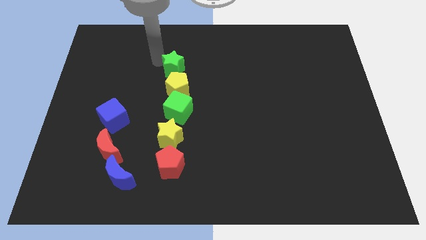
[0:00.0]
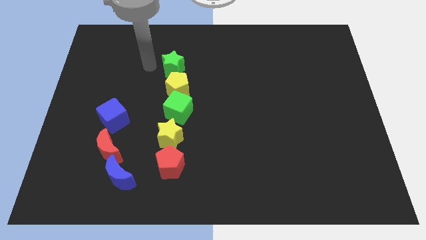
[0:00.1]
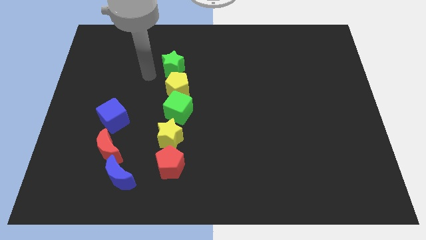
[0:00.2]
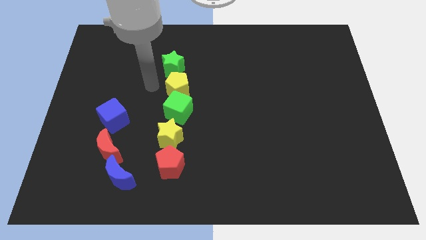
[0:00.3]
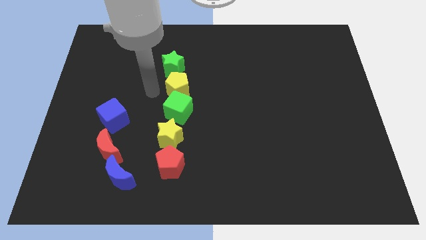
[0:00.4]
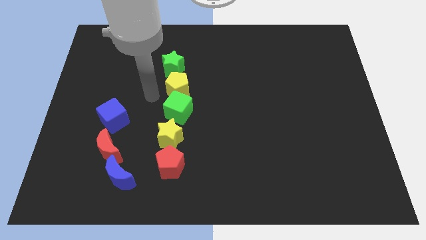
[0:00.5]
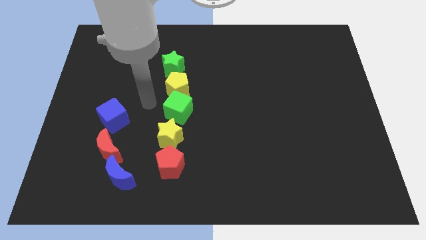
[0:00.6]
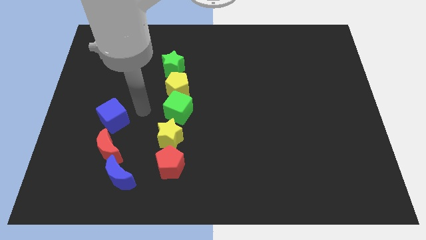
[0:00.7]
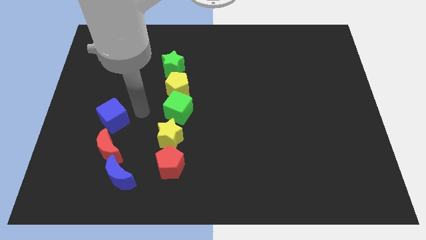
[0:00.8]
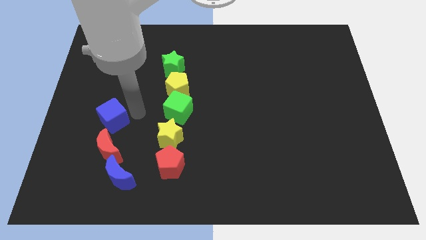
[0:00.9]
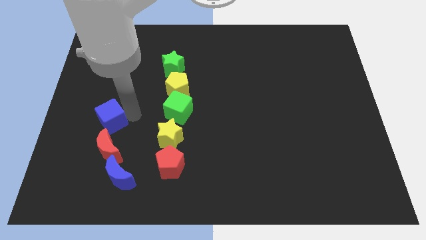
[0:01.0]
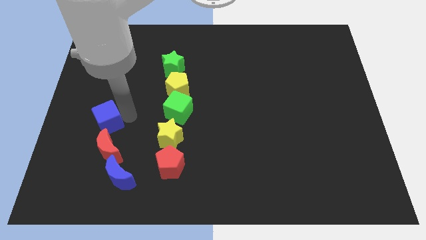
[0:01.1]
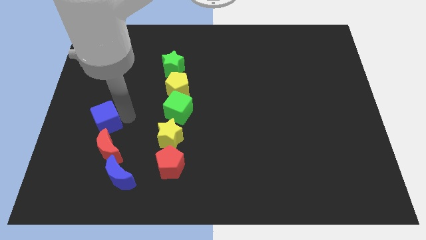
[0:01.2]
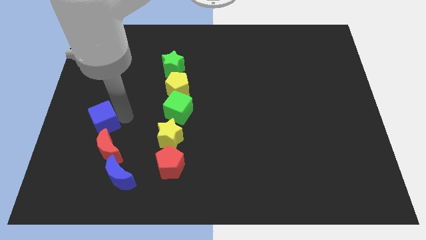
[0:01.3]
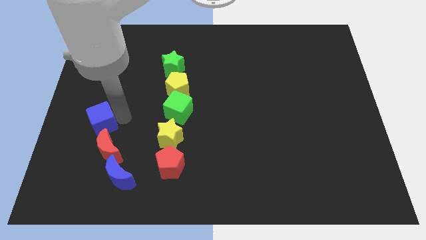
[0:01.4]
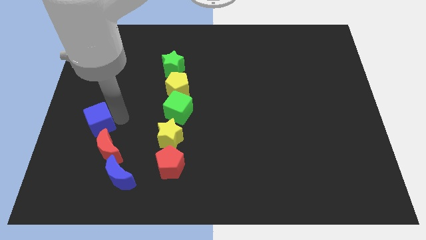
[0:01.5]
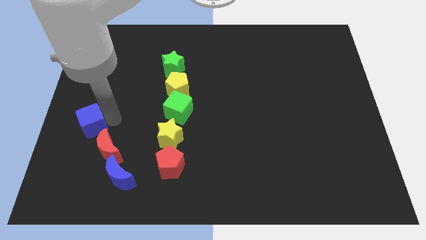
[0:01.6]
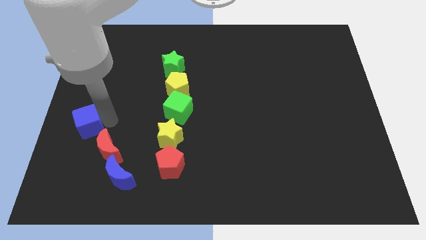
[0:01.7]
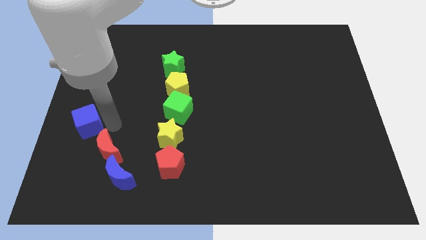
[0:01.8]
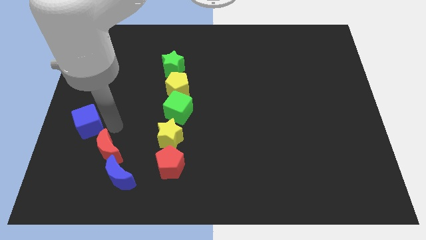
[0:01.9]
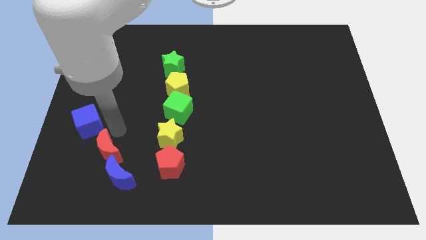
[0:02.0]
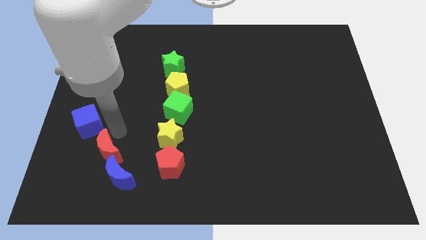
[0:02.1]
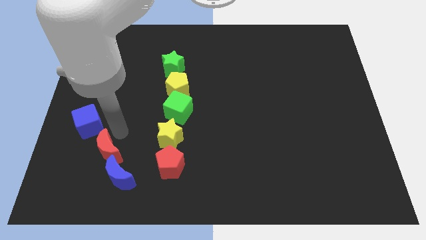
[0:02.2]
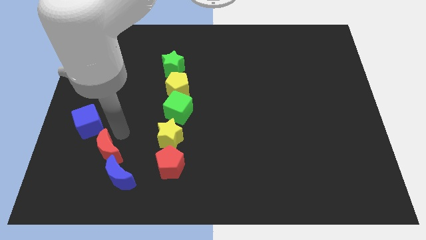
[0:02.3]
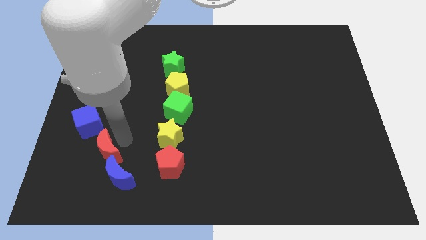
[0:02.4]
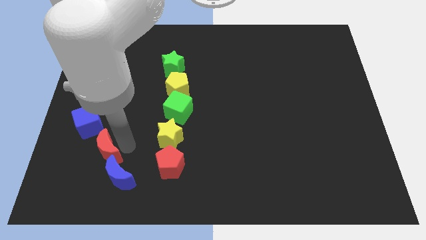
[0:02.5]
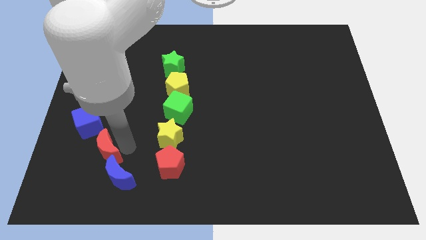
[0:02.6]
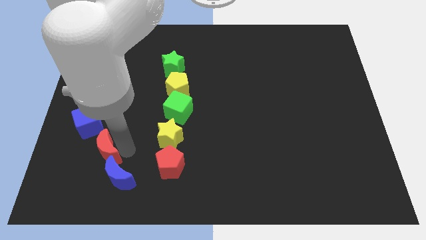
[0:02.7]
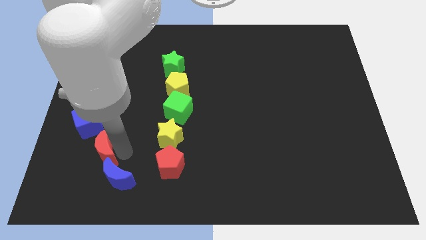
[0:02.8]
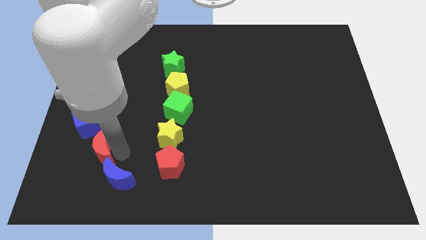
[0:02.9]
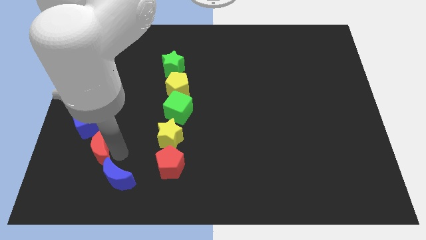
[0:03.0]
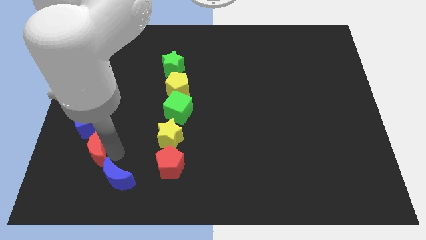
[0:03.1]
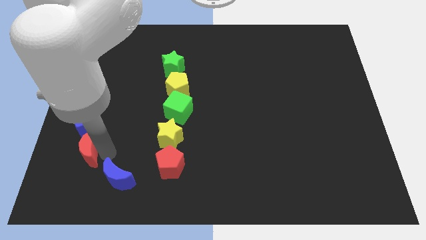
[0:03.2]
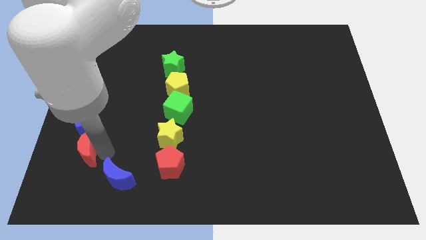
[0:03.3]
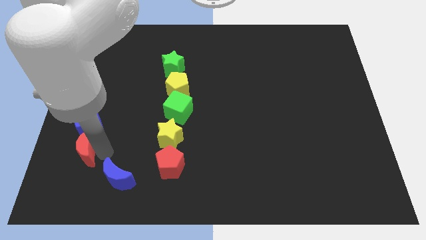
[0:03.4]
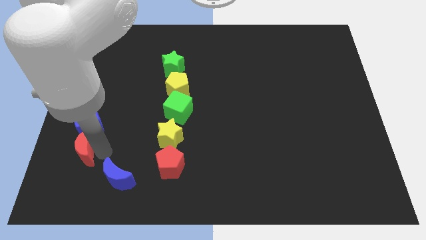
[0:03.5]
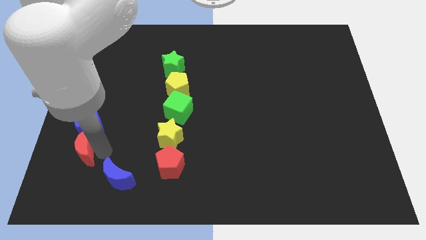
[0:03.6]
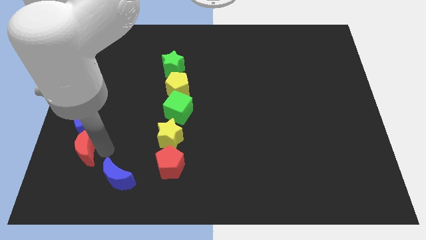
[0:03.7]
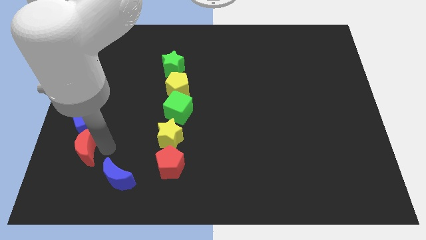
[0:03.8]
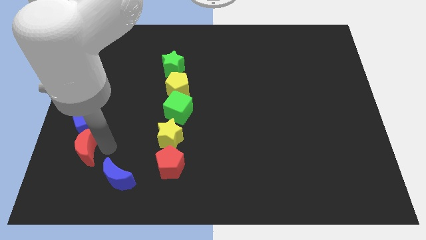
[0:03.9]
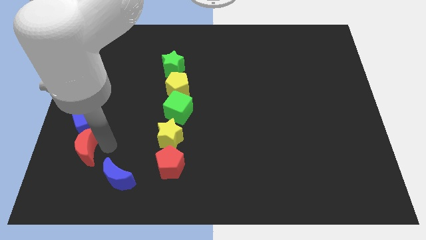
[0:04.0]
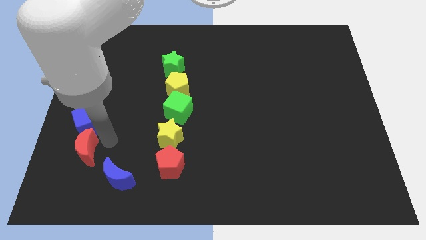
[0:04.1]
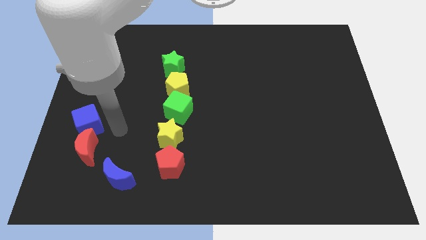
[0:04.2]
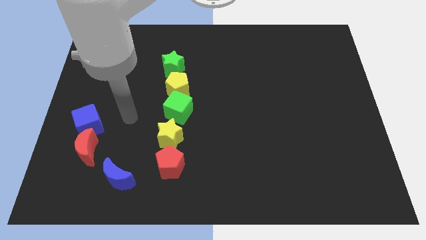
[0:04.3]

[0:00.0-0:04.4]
push the blue cube and red crescent towards left slightly

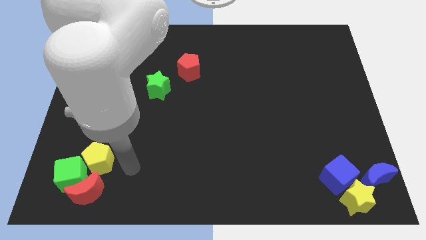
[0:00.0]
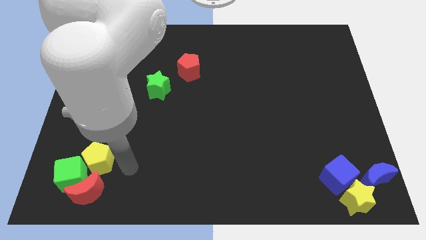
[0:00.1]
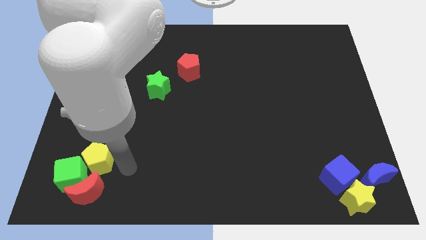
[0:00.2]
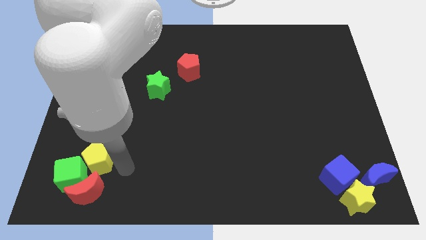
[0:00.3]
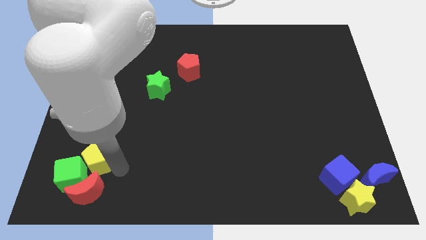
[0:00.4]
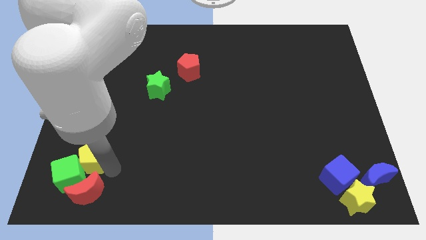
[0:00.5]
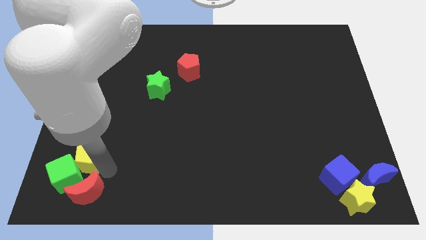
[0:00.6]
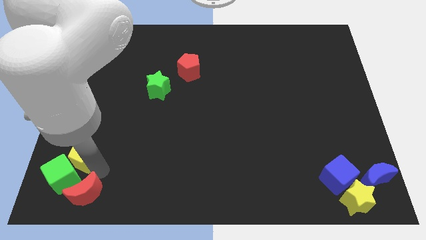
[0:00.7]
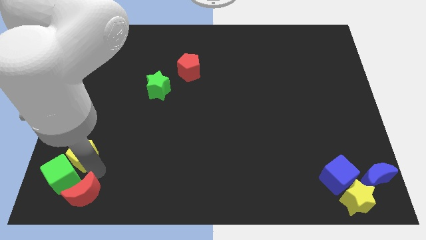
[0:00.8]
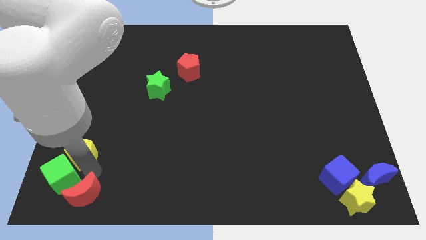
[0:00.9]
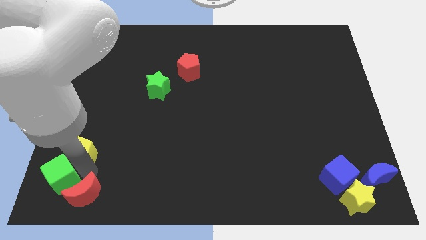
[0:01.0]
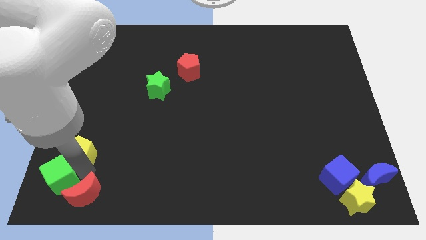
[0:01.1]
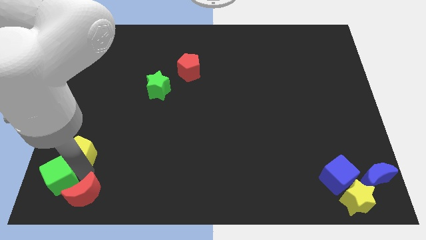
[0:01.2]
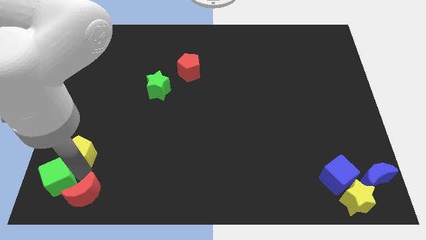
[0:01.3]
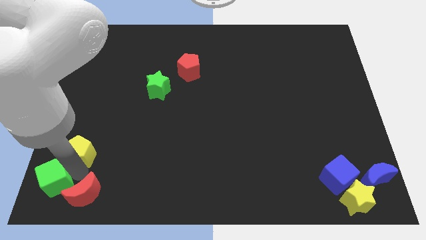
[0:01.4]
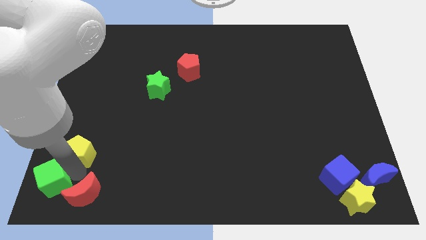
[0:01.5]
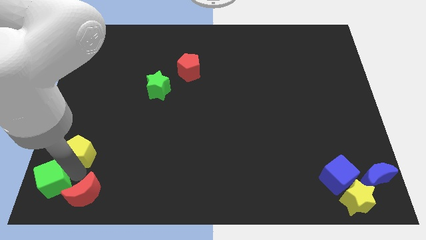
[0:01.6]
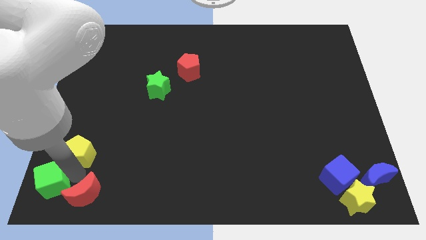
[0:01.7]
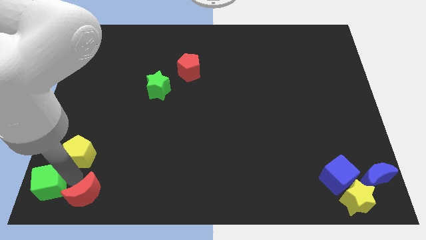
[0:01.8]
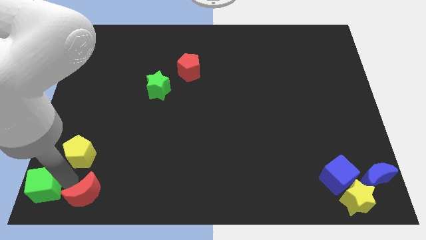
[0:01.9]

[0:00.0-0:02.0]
separate the group of blocks at the bottom left corner

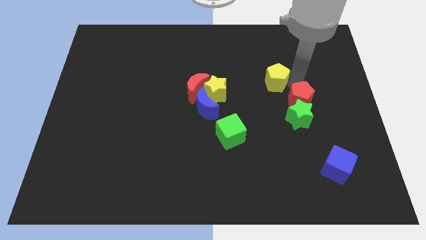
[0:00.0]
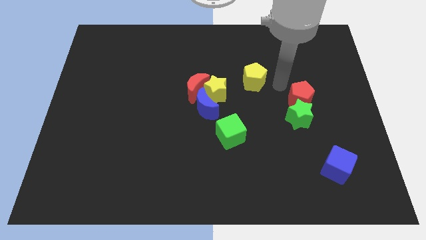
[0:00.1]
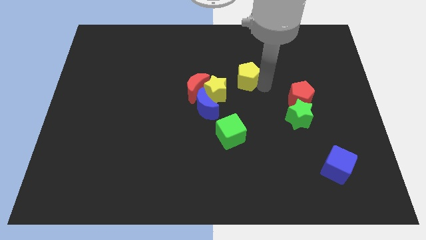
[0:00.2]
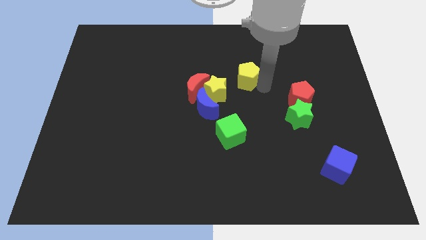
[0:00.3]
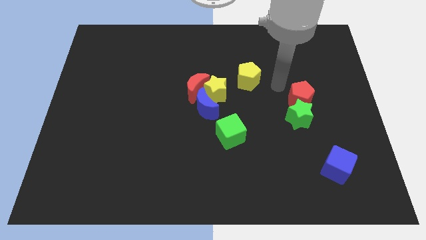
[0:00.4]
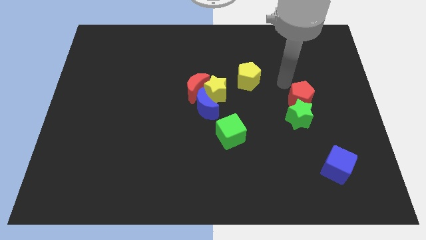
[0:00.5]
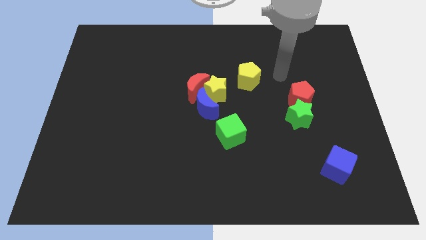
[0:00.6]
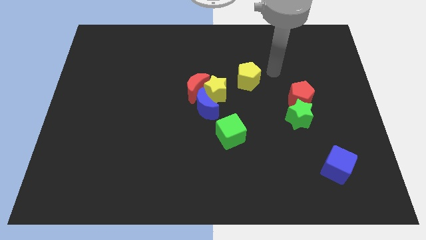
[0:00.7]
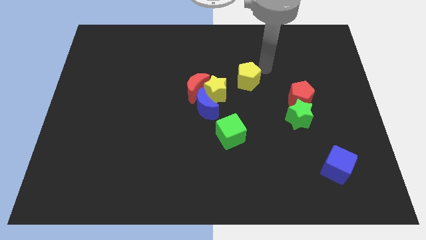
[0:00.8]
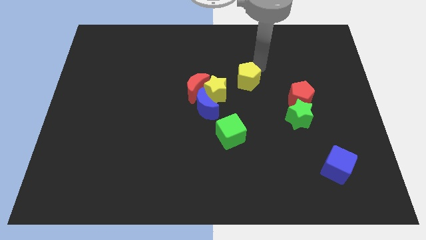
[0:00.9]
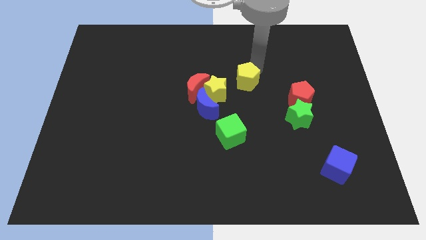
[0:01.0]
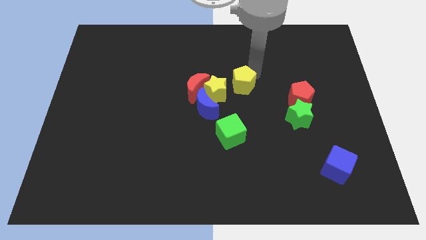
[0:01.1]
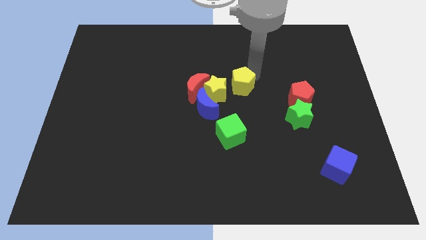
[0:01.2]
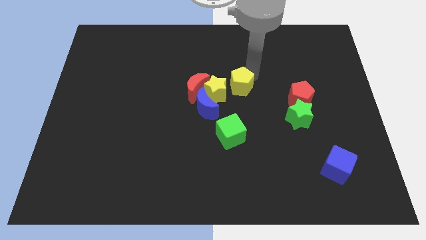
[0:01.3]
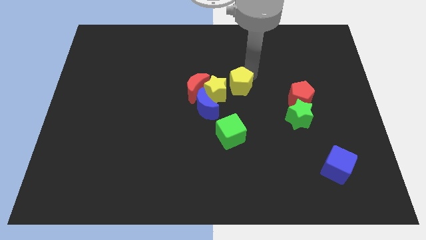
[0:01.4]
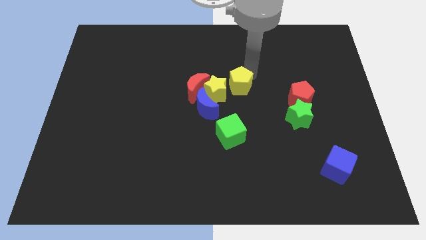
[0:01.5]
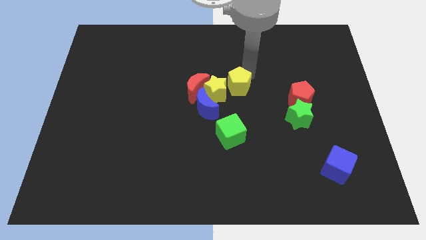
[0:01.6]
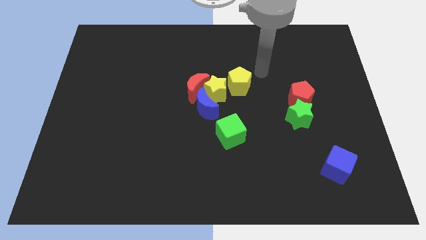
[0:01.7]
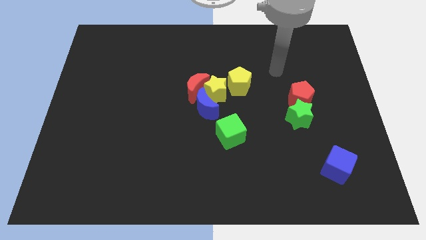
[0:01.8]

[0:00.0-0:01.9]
slide the yellow pentagon close to the right of the yellow star

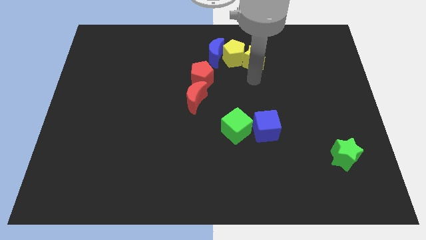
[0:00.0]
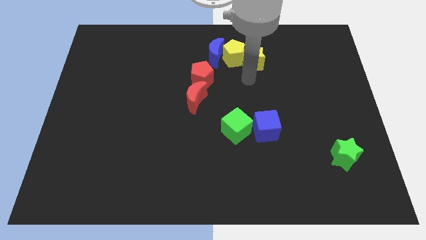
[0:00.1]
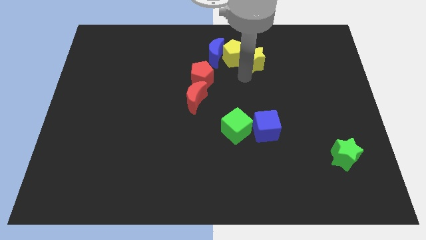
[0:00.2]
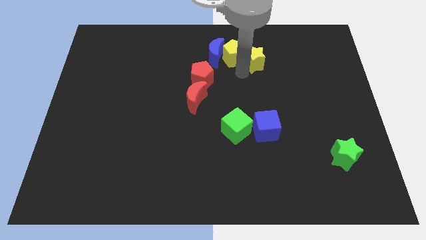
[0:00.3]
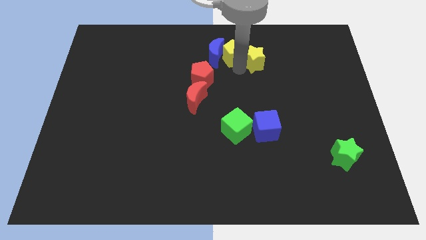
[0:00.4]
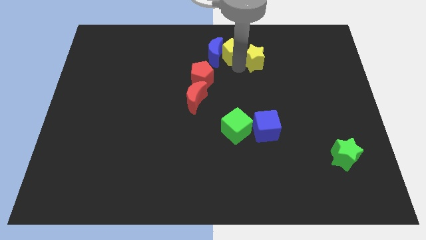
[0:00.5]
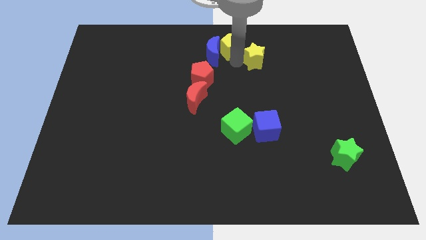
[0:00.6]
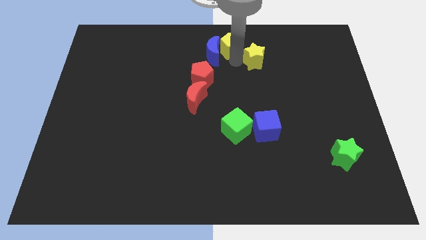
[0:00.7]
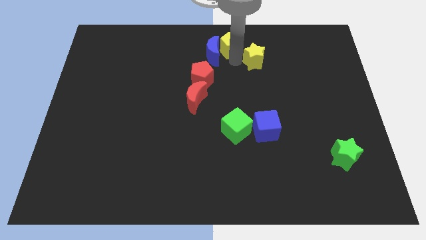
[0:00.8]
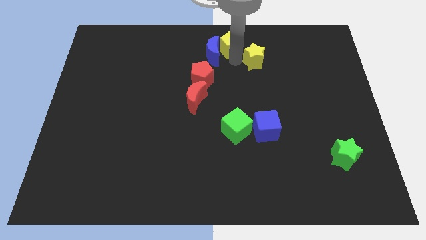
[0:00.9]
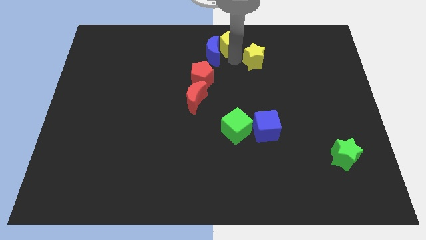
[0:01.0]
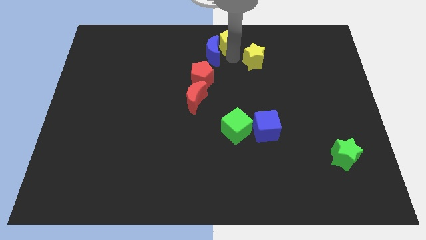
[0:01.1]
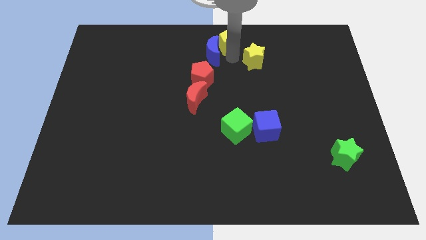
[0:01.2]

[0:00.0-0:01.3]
separate the yellow pentagon from the yellow star
